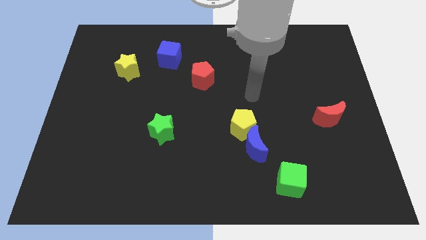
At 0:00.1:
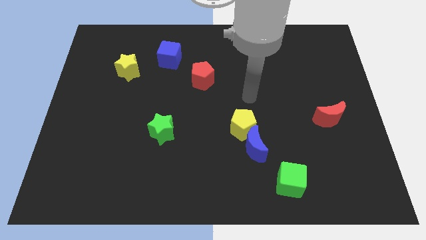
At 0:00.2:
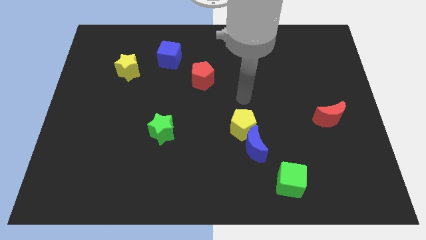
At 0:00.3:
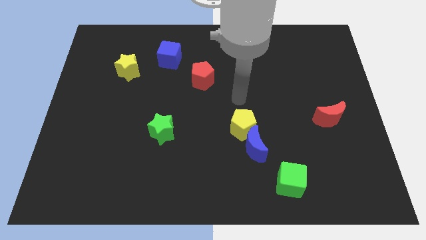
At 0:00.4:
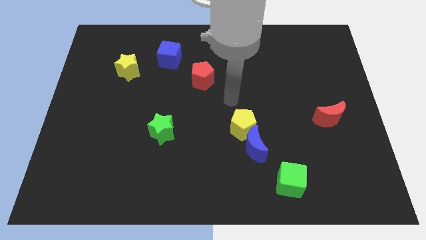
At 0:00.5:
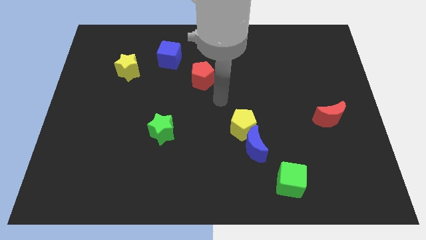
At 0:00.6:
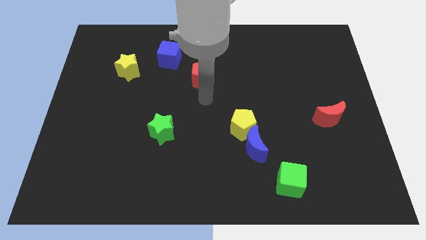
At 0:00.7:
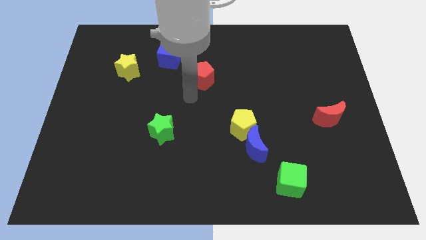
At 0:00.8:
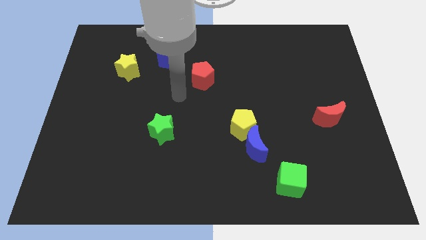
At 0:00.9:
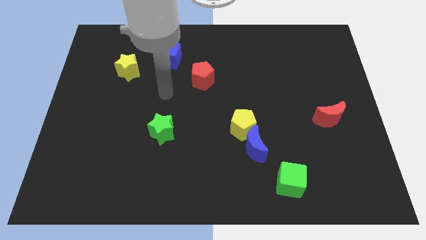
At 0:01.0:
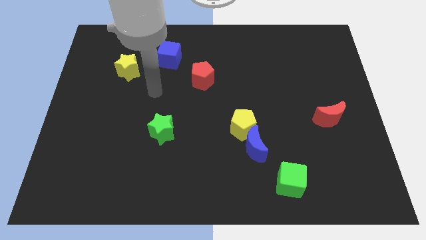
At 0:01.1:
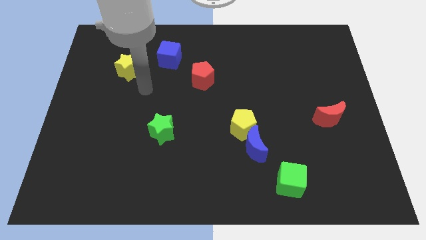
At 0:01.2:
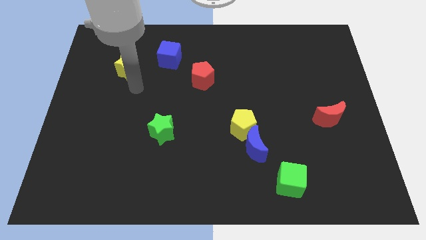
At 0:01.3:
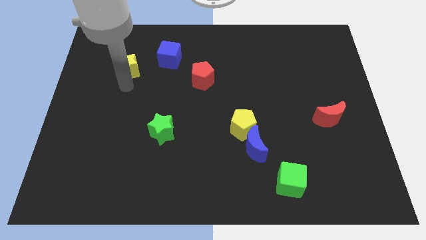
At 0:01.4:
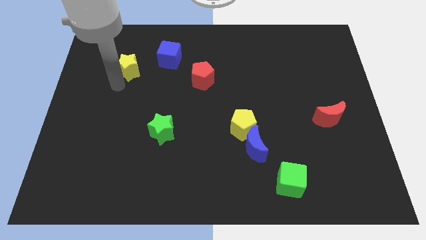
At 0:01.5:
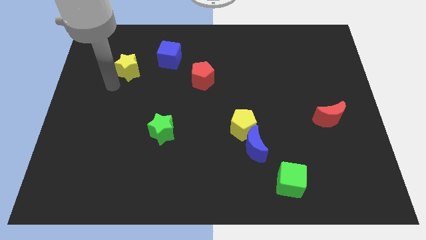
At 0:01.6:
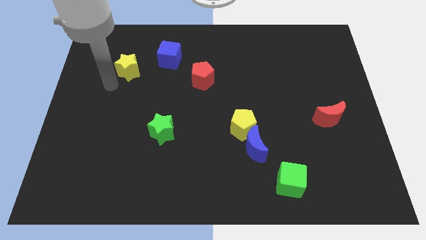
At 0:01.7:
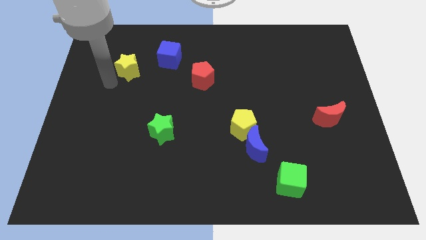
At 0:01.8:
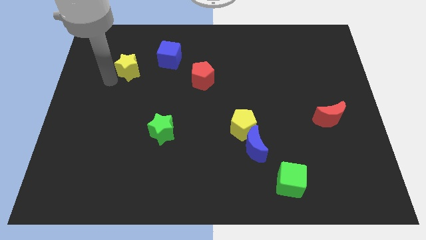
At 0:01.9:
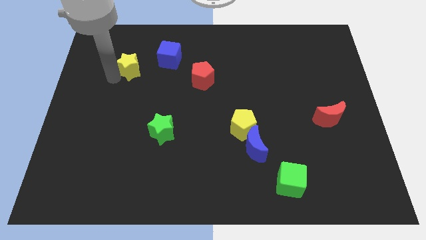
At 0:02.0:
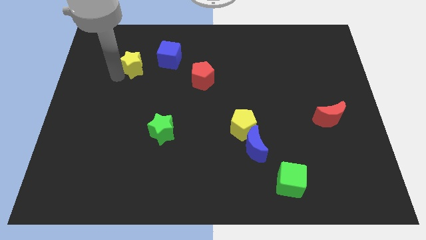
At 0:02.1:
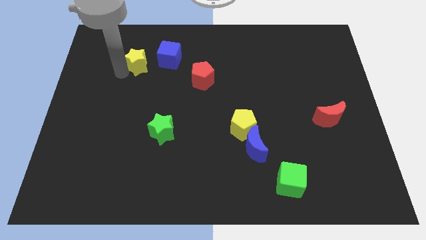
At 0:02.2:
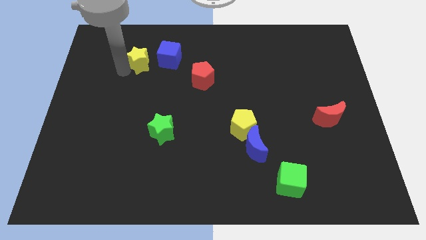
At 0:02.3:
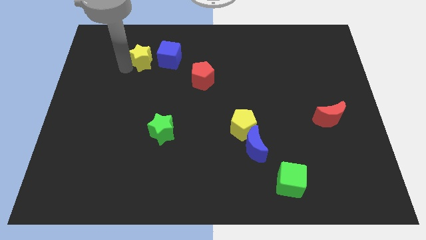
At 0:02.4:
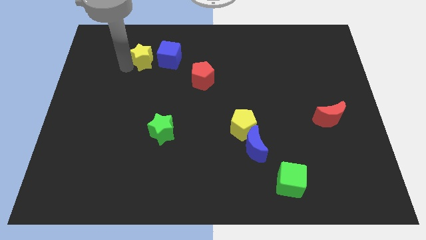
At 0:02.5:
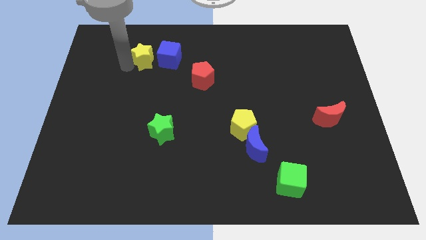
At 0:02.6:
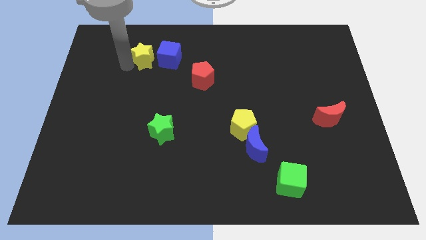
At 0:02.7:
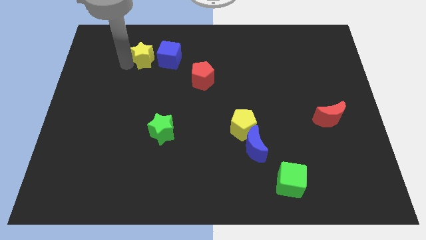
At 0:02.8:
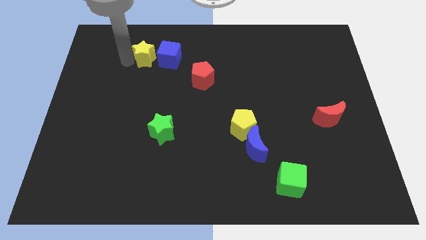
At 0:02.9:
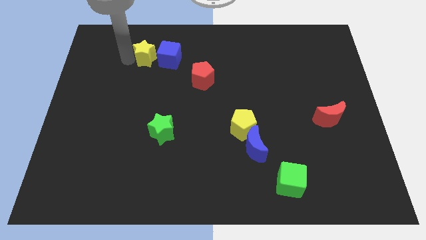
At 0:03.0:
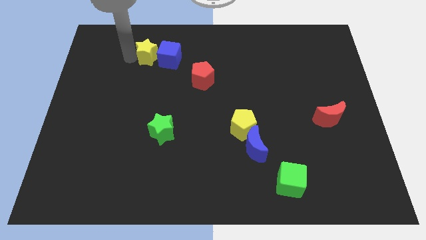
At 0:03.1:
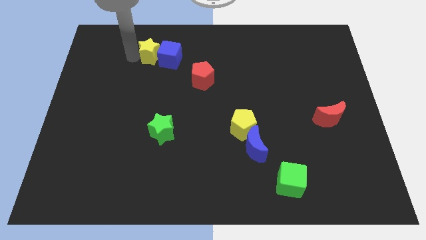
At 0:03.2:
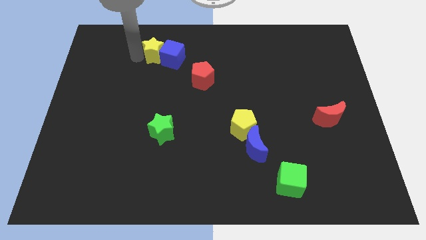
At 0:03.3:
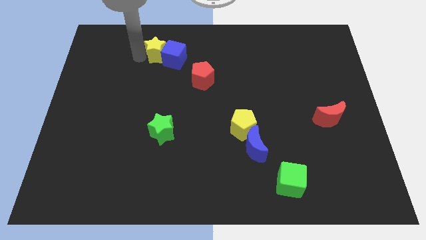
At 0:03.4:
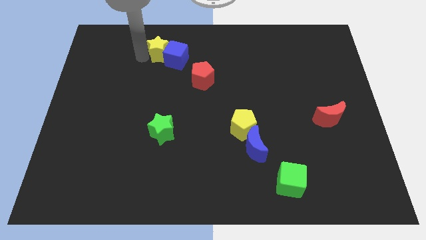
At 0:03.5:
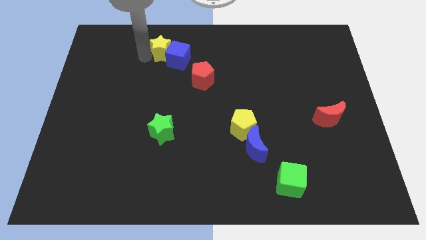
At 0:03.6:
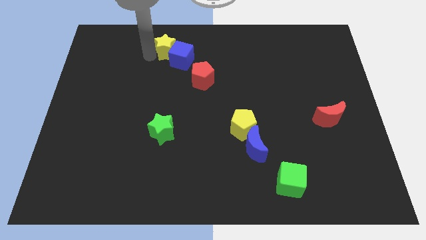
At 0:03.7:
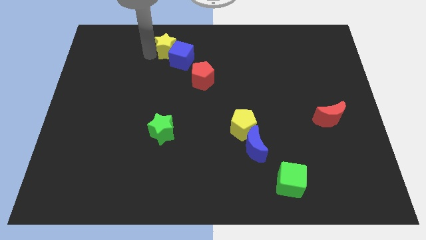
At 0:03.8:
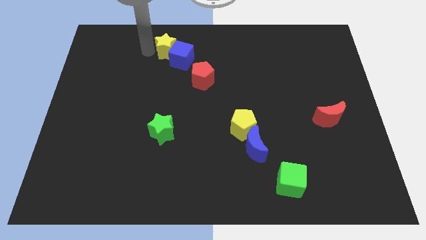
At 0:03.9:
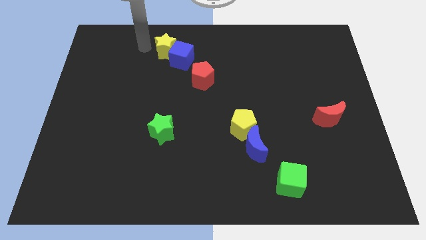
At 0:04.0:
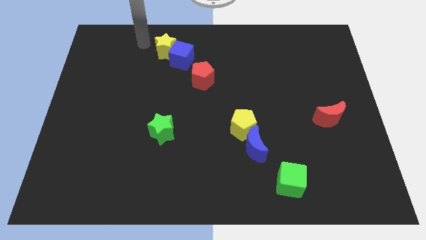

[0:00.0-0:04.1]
place the yellow star beside the blue cube

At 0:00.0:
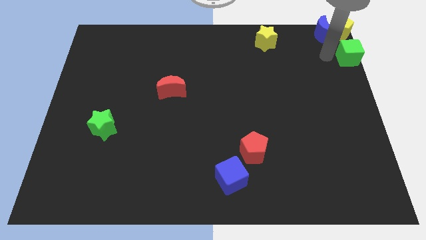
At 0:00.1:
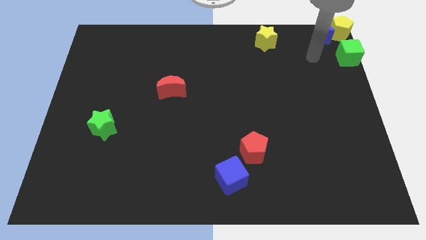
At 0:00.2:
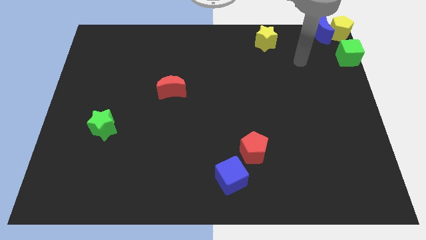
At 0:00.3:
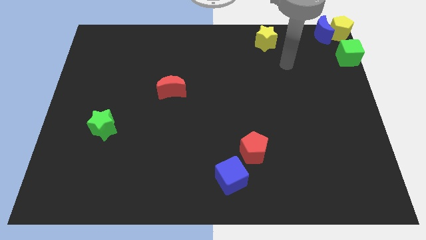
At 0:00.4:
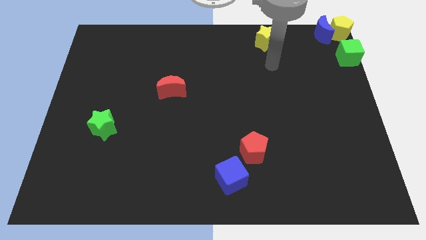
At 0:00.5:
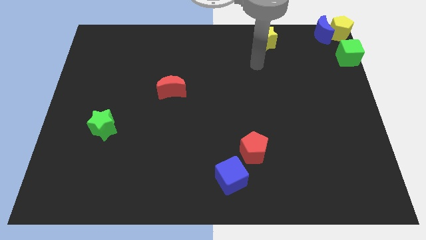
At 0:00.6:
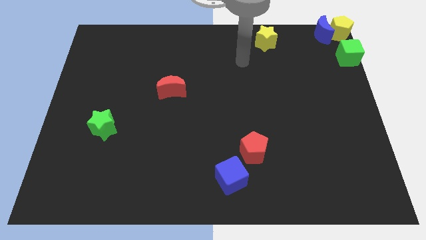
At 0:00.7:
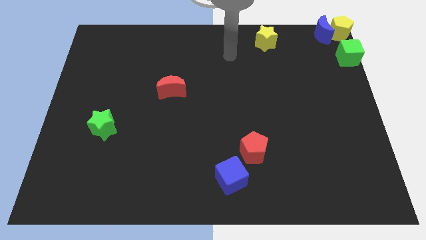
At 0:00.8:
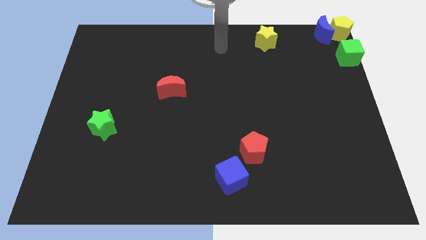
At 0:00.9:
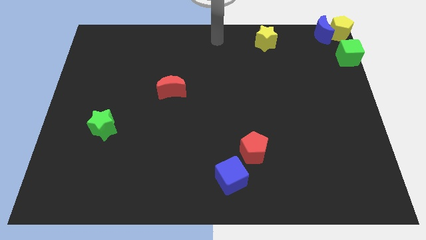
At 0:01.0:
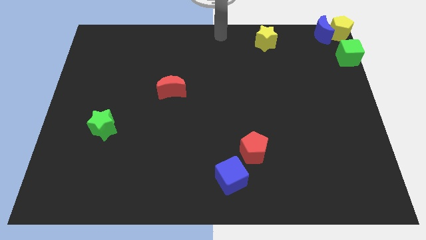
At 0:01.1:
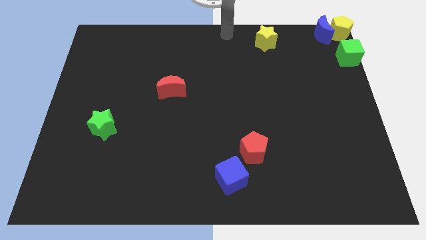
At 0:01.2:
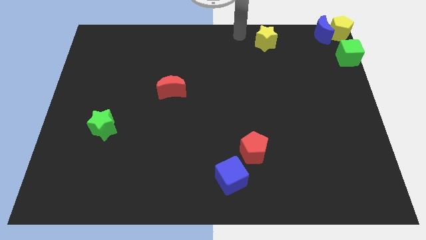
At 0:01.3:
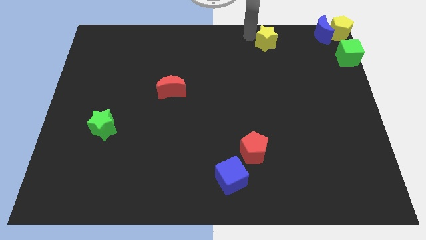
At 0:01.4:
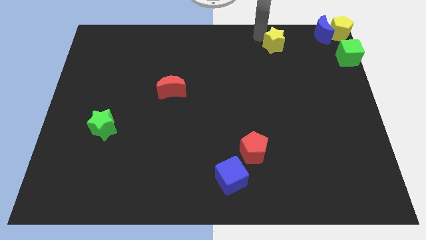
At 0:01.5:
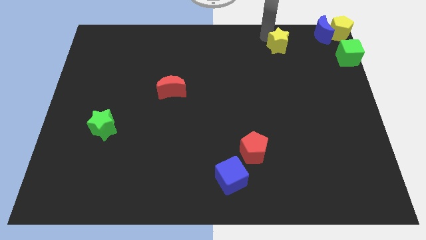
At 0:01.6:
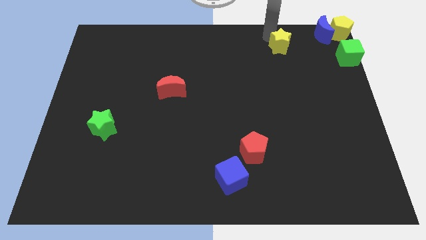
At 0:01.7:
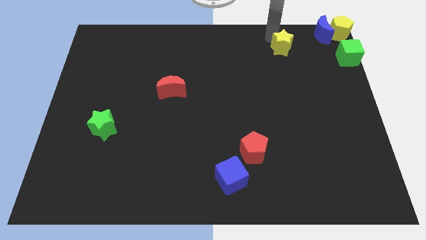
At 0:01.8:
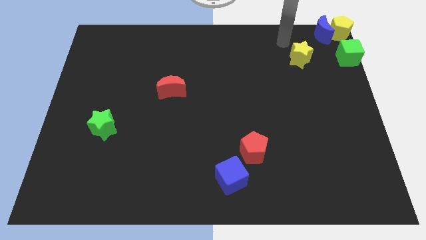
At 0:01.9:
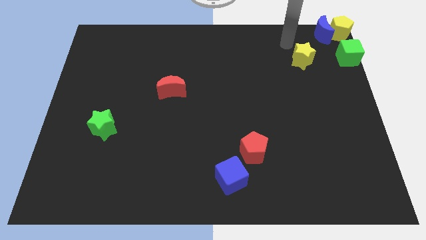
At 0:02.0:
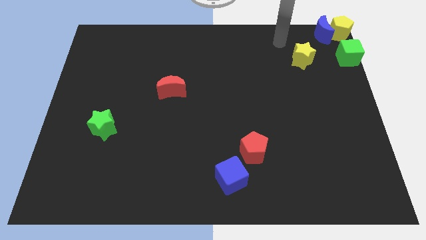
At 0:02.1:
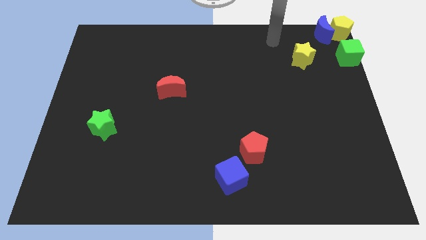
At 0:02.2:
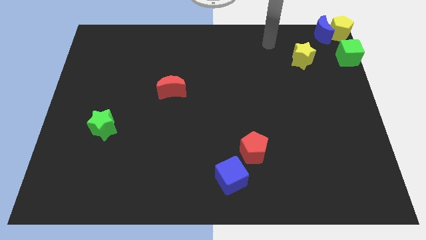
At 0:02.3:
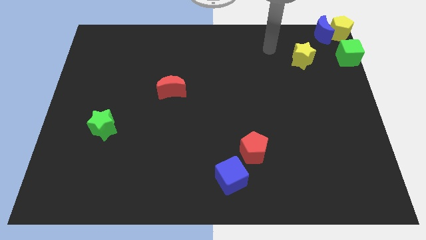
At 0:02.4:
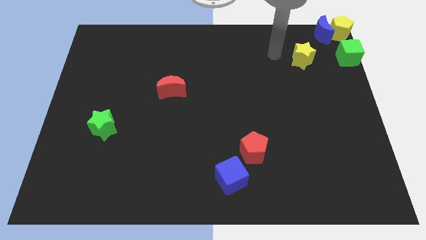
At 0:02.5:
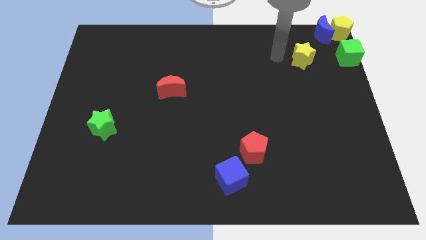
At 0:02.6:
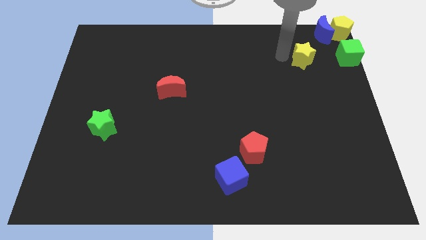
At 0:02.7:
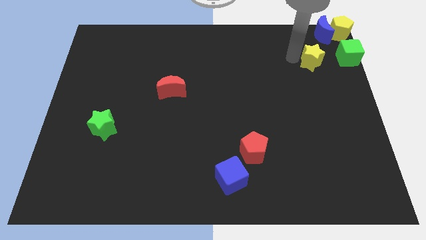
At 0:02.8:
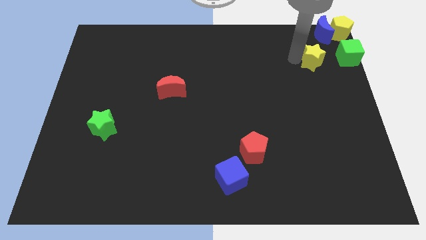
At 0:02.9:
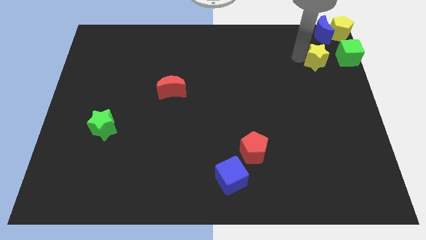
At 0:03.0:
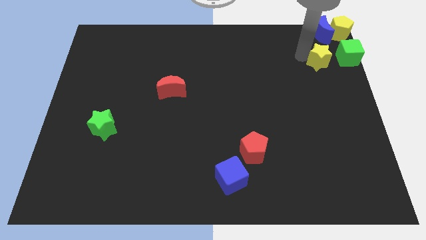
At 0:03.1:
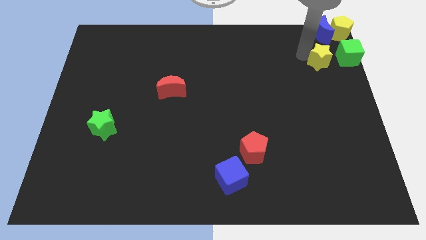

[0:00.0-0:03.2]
move the yellow star to the left of the green cube

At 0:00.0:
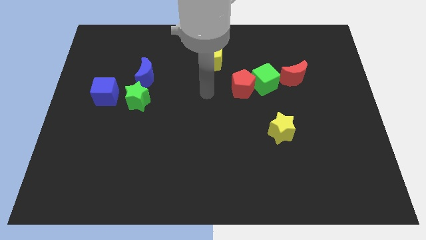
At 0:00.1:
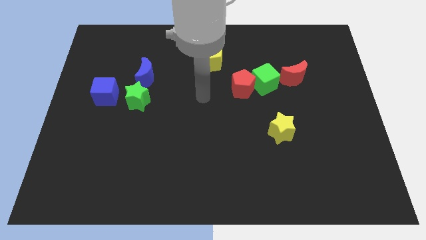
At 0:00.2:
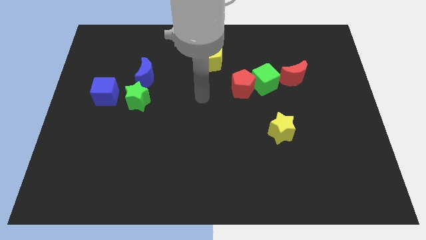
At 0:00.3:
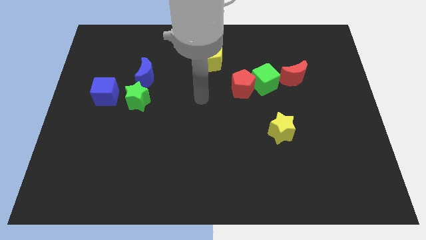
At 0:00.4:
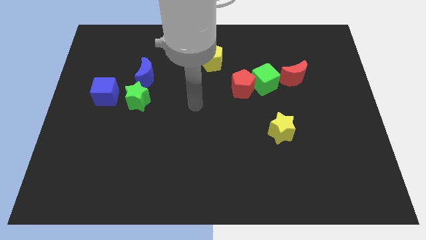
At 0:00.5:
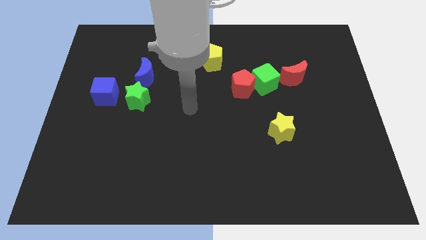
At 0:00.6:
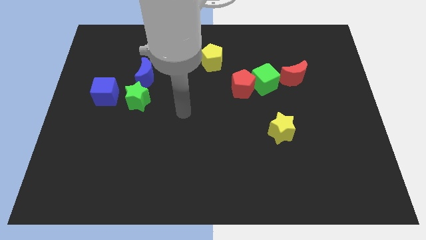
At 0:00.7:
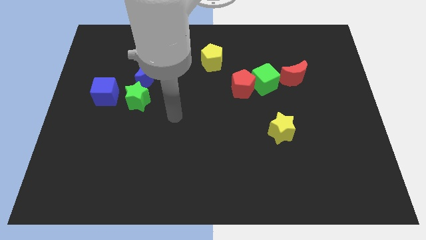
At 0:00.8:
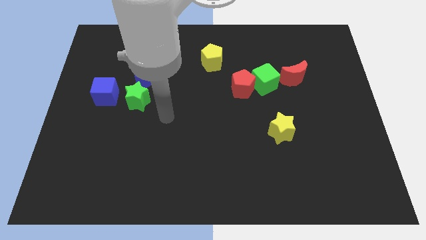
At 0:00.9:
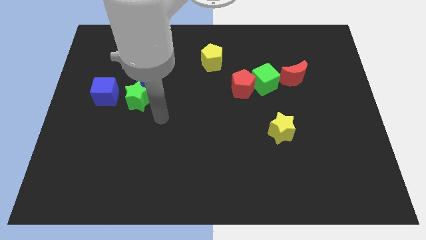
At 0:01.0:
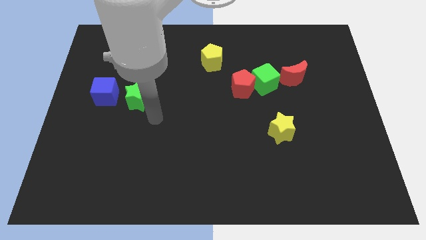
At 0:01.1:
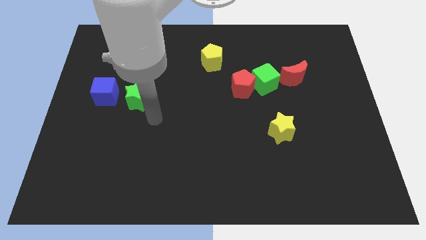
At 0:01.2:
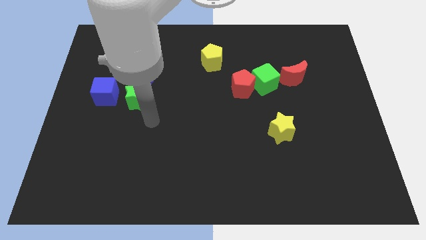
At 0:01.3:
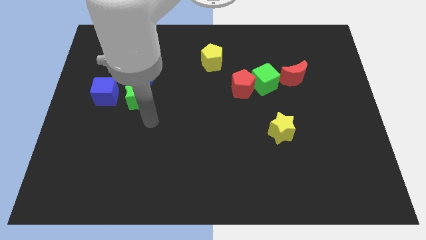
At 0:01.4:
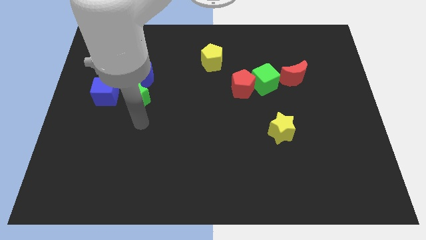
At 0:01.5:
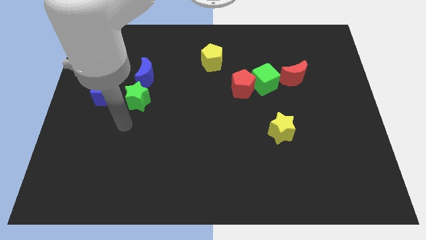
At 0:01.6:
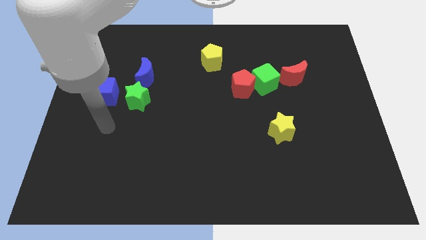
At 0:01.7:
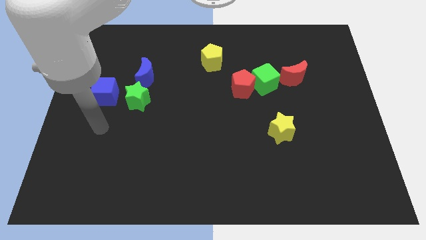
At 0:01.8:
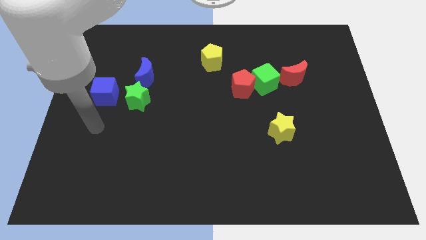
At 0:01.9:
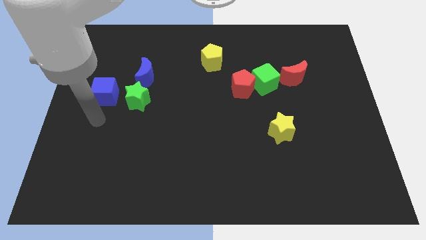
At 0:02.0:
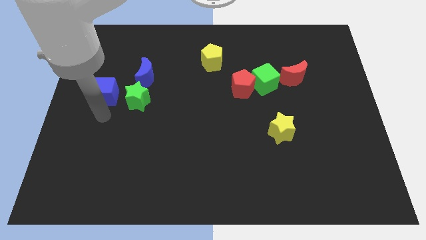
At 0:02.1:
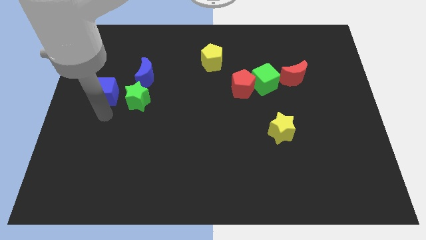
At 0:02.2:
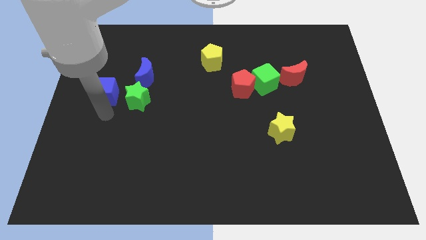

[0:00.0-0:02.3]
move your arm below to the blue cube
